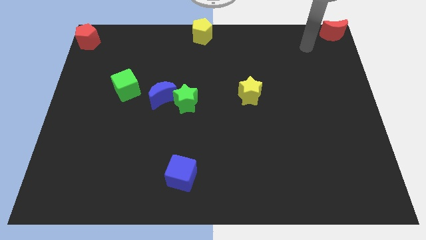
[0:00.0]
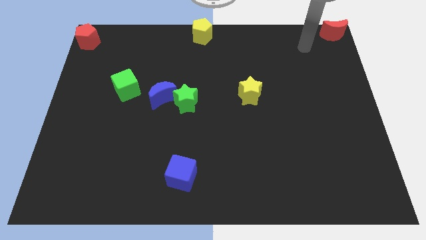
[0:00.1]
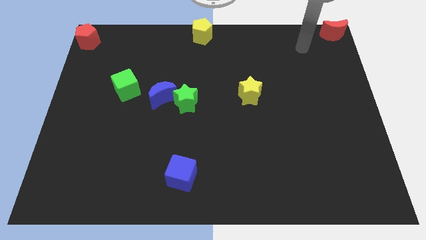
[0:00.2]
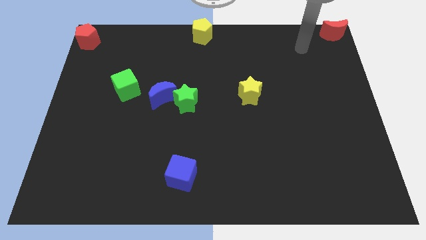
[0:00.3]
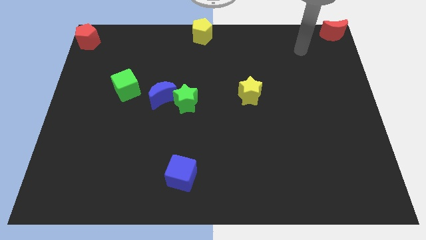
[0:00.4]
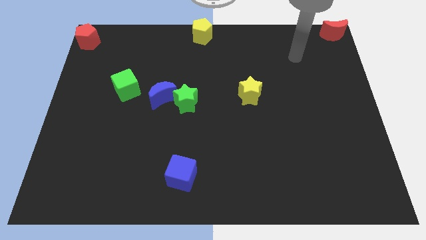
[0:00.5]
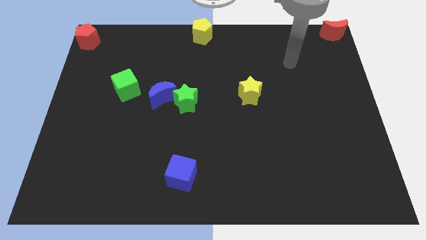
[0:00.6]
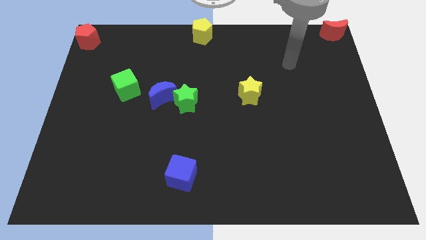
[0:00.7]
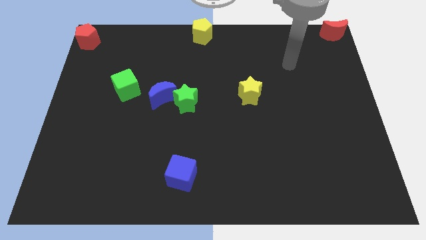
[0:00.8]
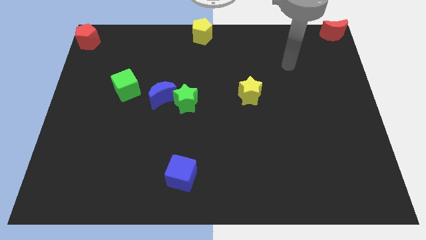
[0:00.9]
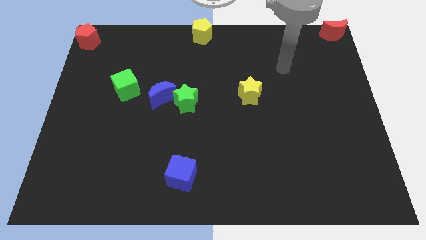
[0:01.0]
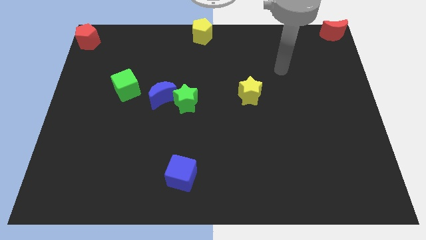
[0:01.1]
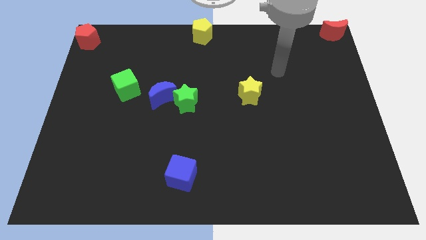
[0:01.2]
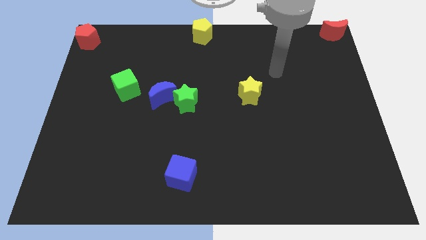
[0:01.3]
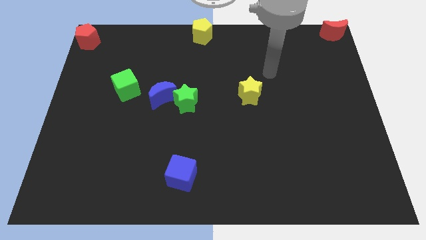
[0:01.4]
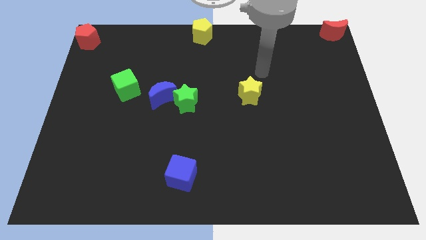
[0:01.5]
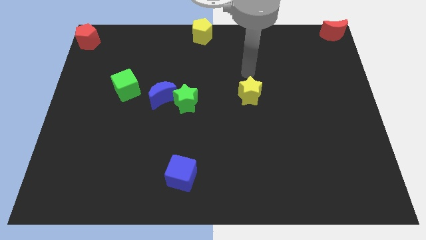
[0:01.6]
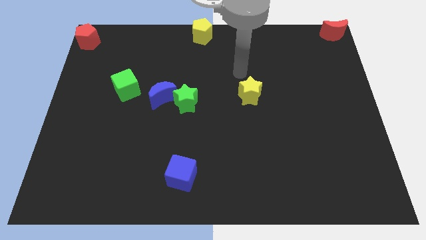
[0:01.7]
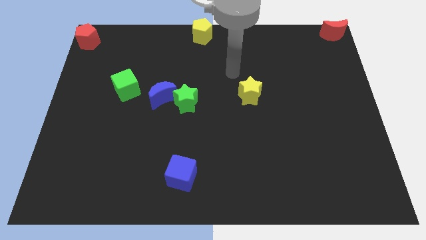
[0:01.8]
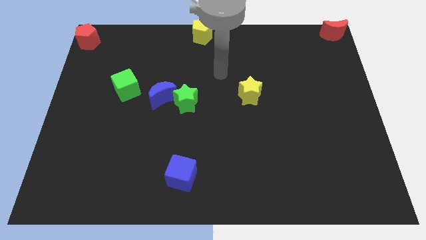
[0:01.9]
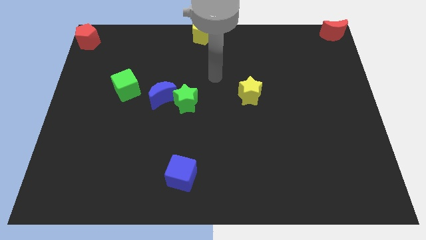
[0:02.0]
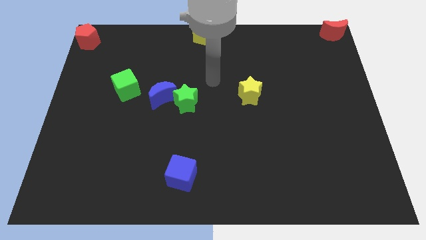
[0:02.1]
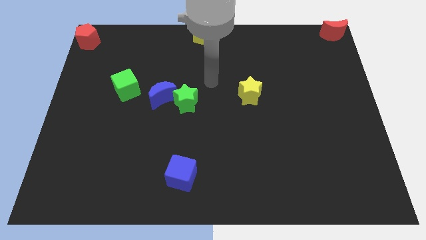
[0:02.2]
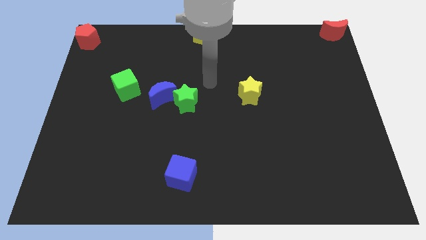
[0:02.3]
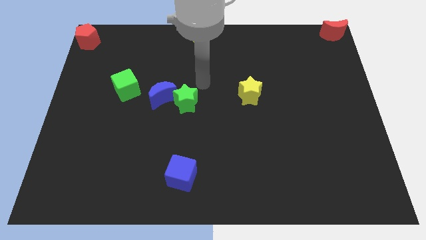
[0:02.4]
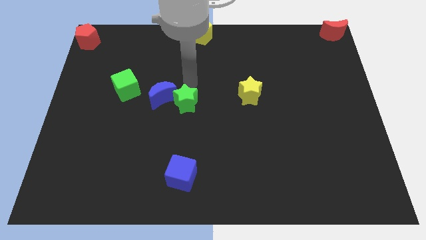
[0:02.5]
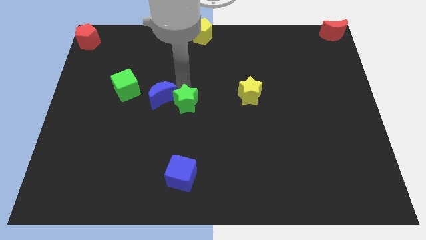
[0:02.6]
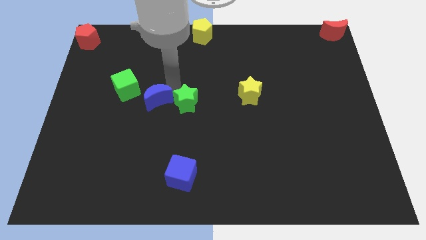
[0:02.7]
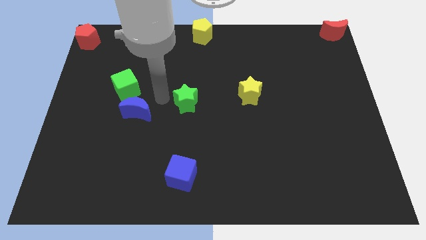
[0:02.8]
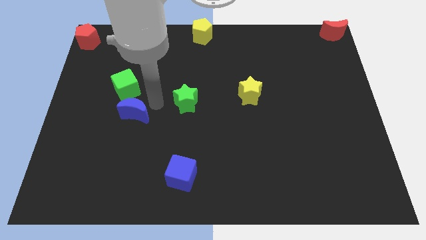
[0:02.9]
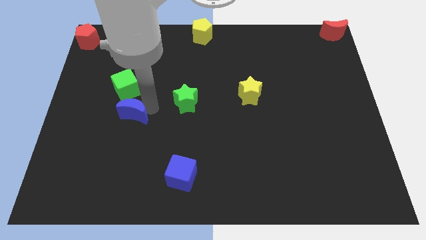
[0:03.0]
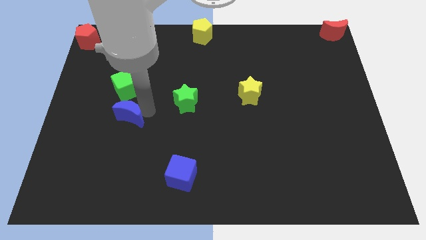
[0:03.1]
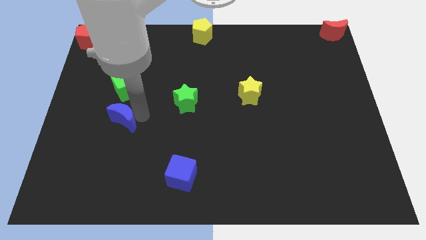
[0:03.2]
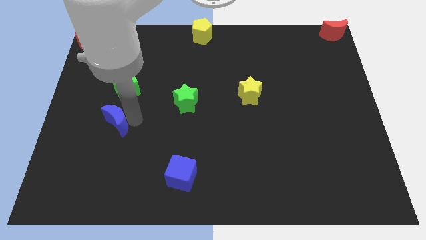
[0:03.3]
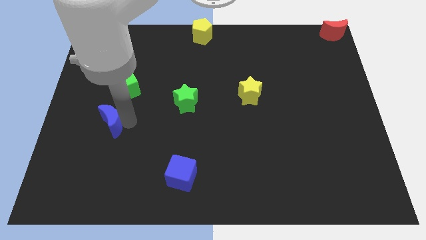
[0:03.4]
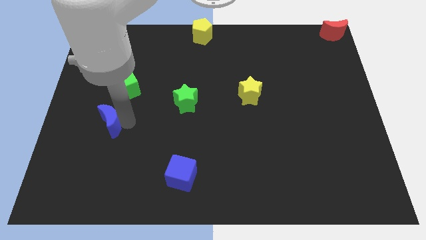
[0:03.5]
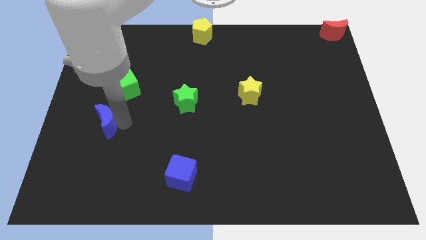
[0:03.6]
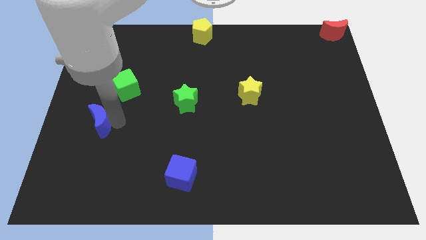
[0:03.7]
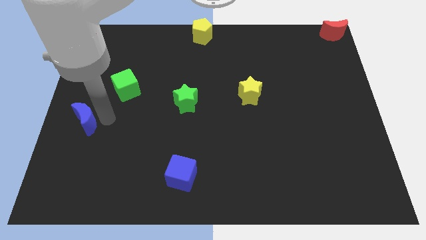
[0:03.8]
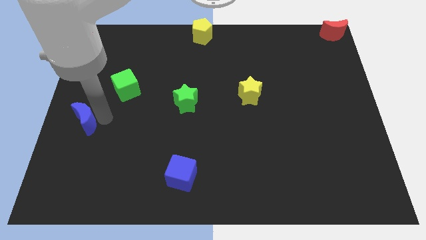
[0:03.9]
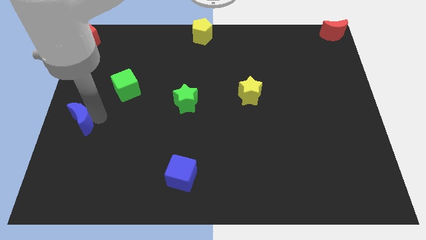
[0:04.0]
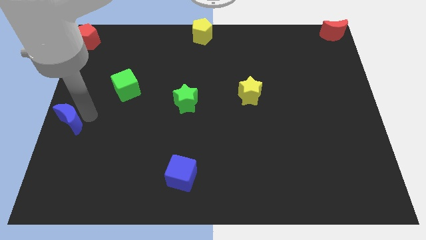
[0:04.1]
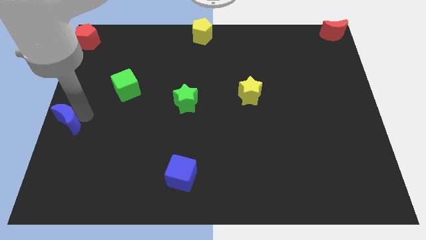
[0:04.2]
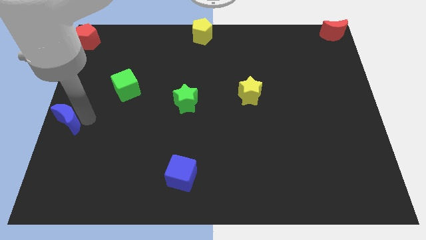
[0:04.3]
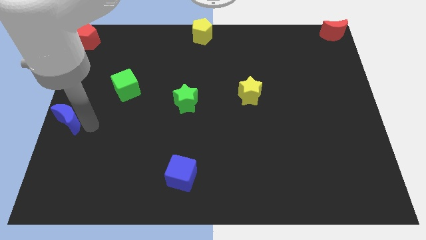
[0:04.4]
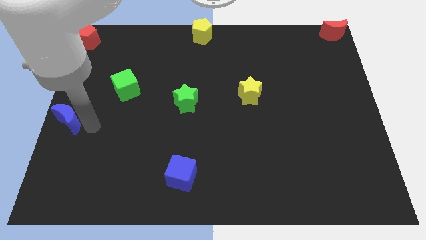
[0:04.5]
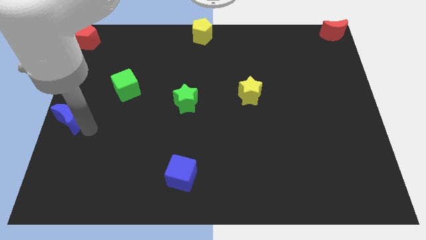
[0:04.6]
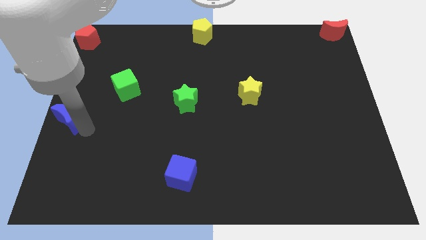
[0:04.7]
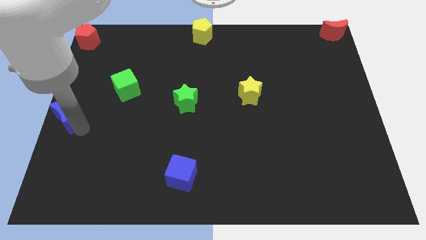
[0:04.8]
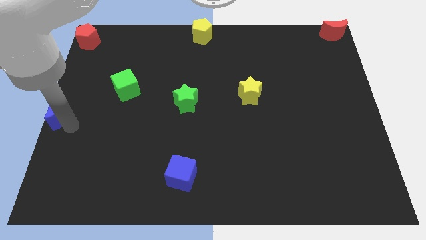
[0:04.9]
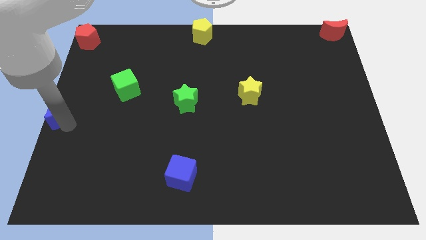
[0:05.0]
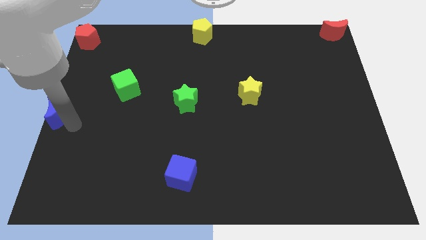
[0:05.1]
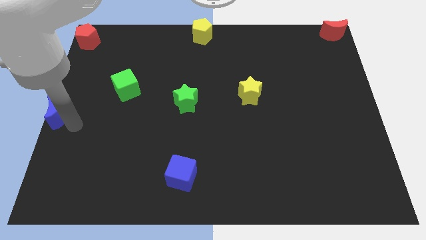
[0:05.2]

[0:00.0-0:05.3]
slide the blue moon to the centre left of the board

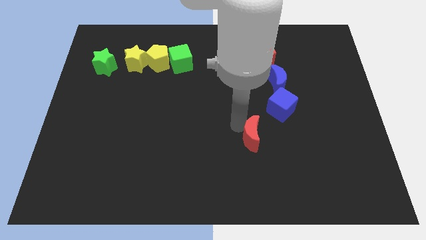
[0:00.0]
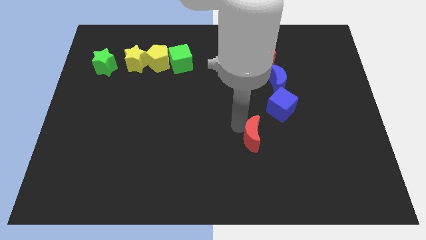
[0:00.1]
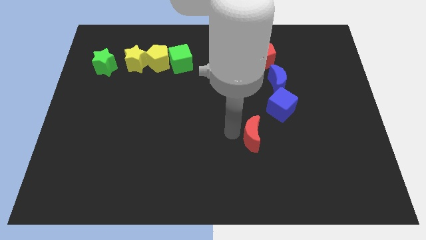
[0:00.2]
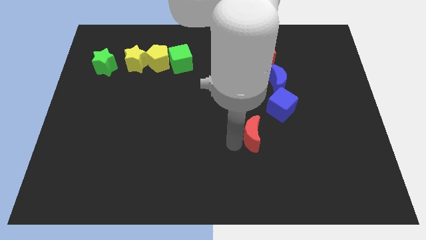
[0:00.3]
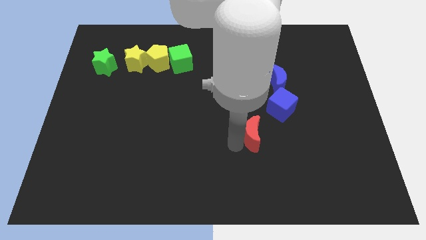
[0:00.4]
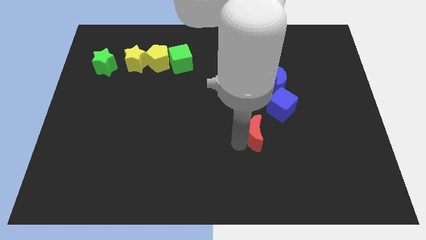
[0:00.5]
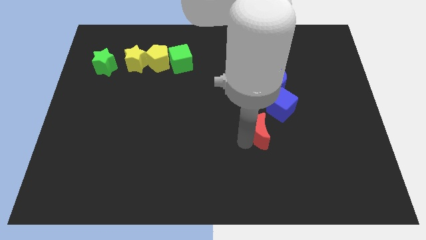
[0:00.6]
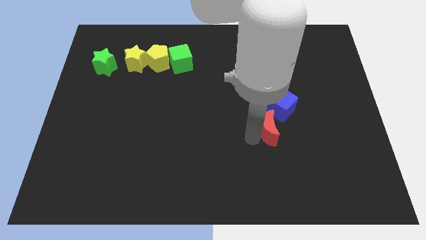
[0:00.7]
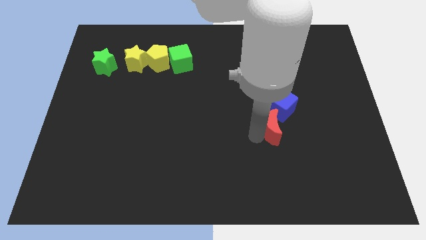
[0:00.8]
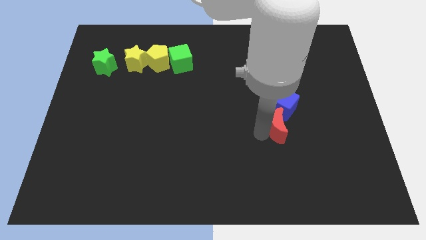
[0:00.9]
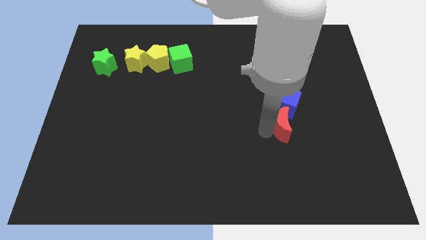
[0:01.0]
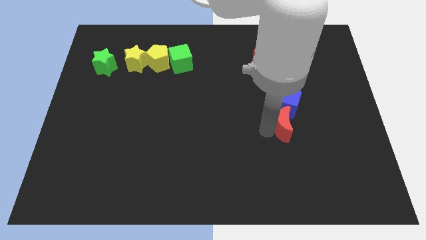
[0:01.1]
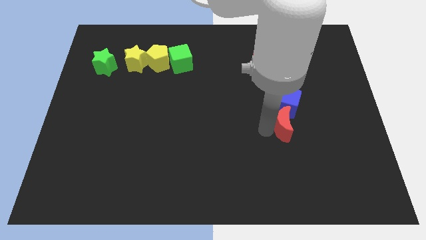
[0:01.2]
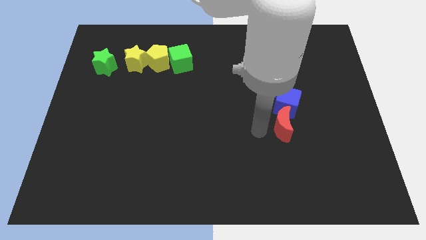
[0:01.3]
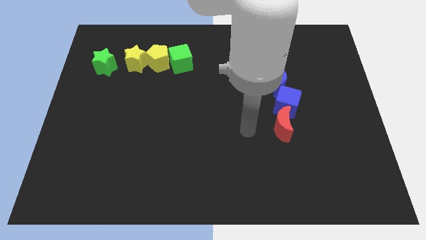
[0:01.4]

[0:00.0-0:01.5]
place red moon below the blue cube

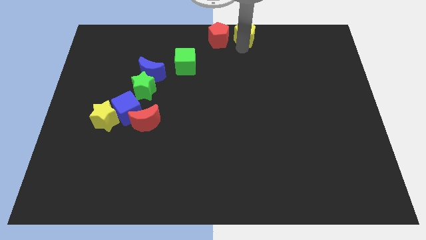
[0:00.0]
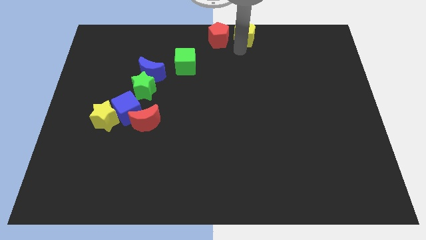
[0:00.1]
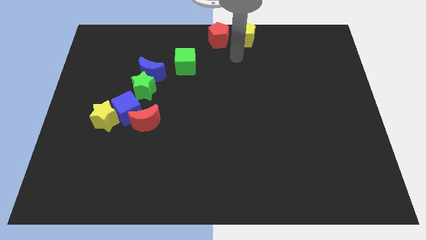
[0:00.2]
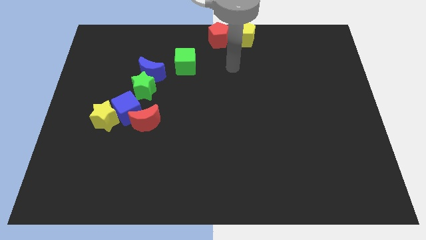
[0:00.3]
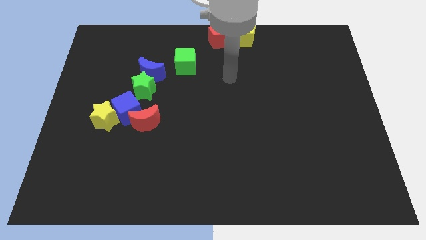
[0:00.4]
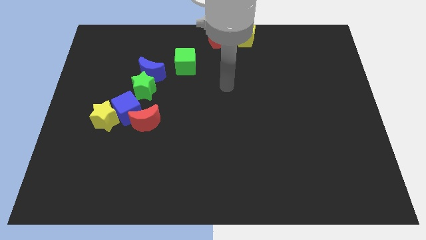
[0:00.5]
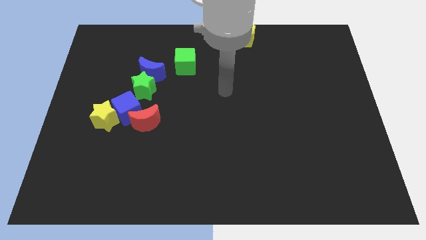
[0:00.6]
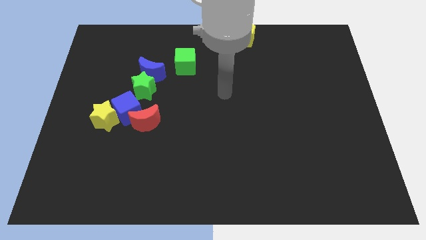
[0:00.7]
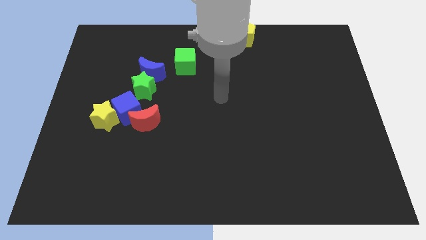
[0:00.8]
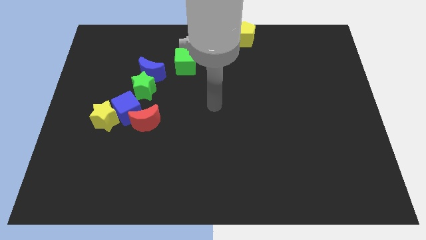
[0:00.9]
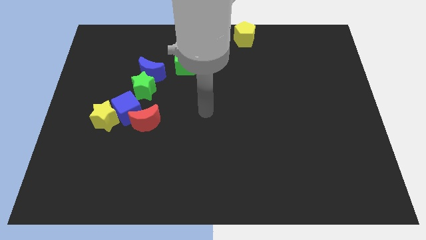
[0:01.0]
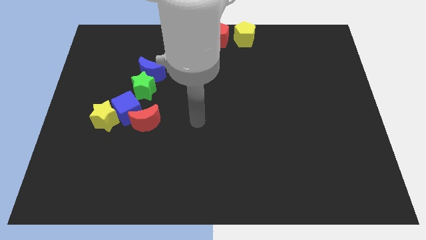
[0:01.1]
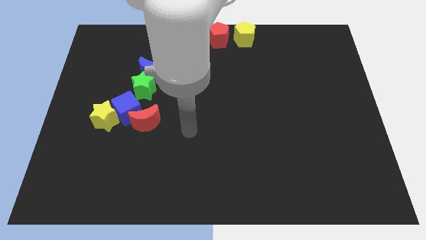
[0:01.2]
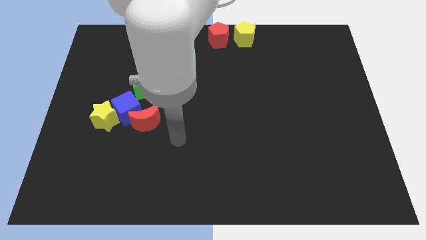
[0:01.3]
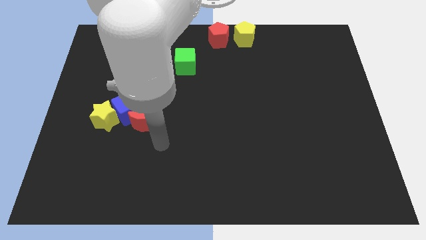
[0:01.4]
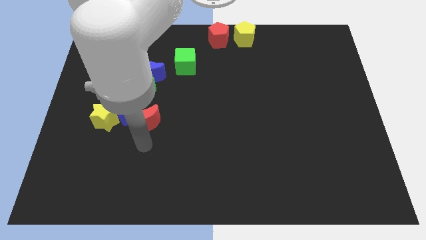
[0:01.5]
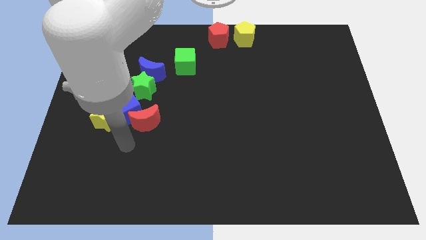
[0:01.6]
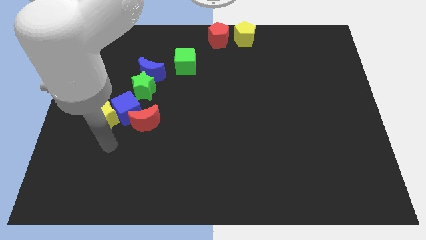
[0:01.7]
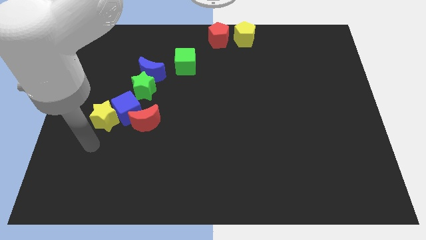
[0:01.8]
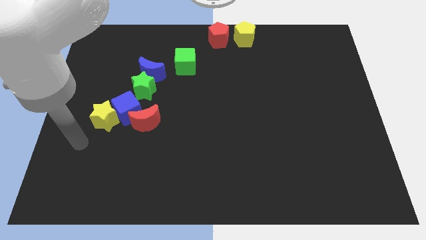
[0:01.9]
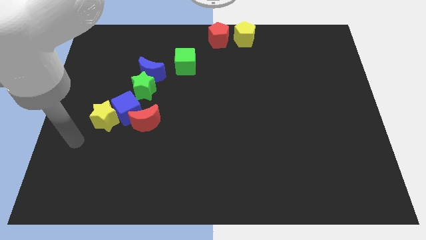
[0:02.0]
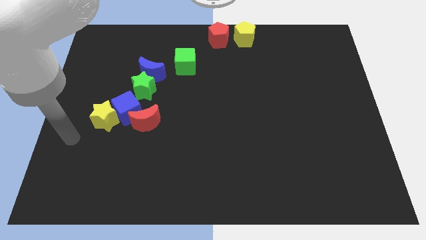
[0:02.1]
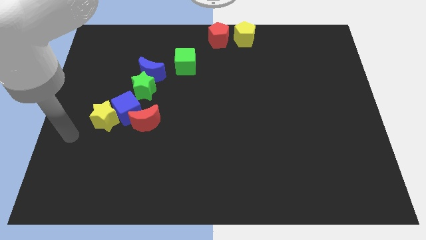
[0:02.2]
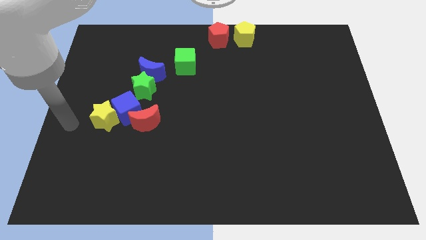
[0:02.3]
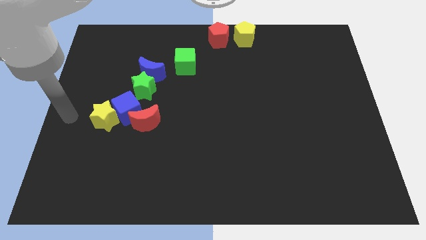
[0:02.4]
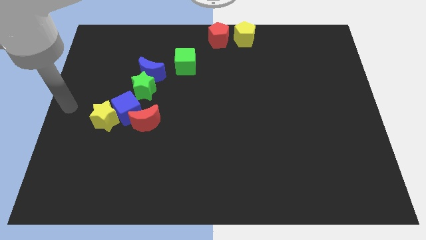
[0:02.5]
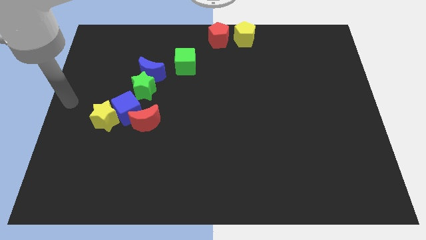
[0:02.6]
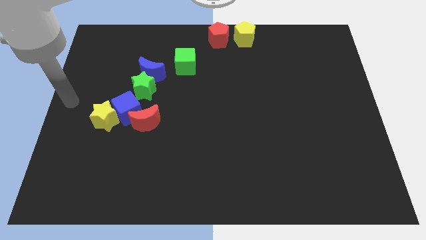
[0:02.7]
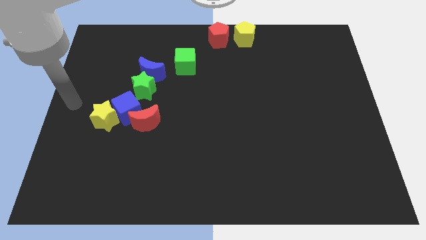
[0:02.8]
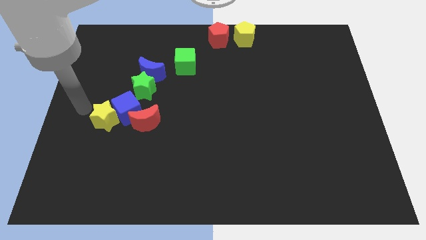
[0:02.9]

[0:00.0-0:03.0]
move your arm towards the yellow star
